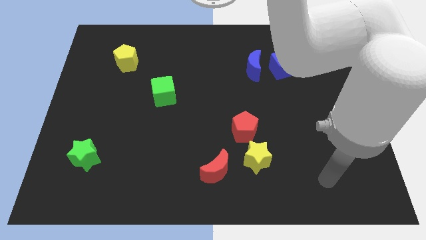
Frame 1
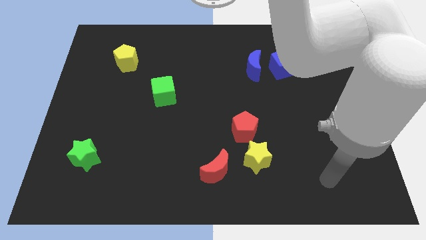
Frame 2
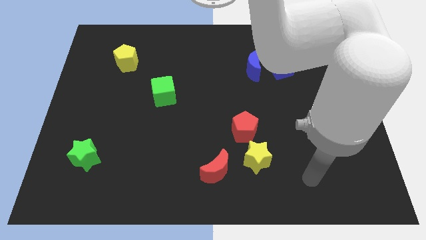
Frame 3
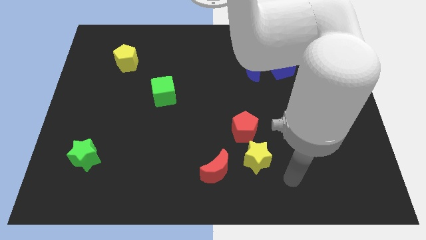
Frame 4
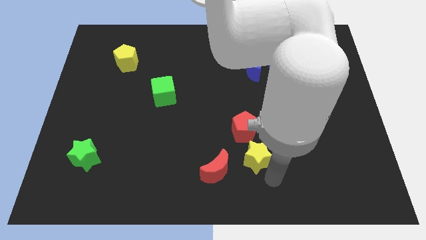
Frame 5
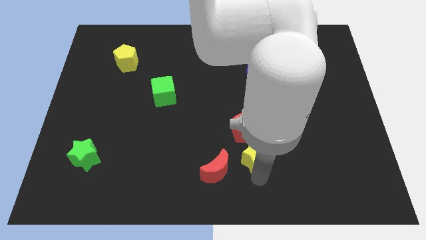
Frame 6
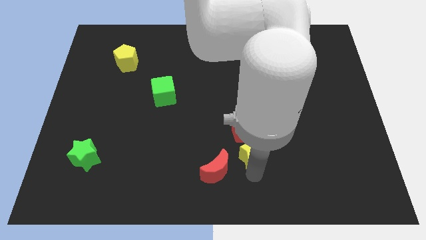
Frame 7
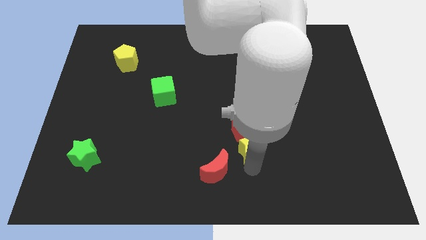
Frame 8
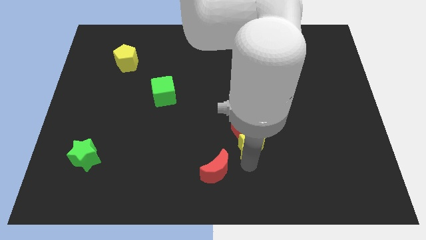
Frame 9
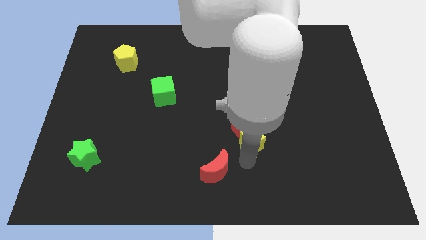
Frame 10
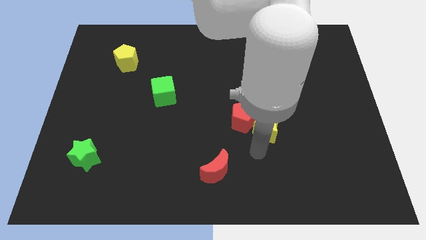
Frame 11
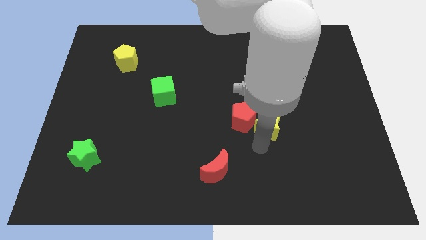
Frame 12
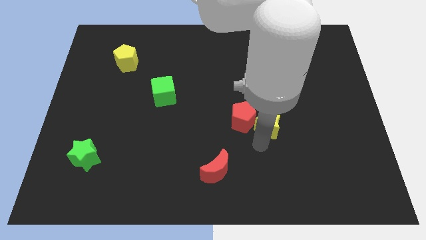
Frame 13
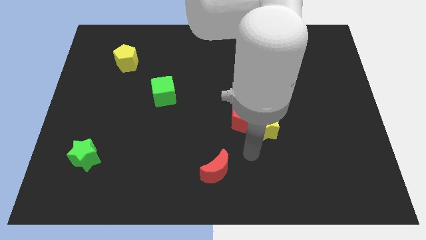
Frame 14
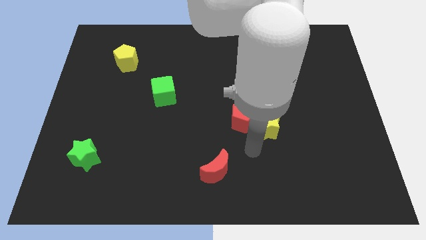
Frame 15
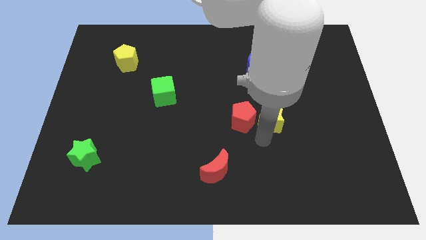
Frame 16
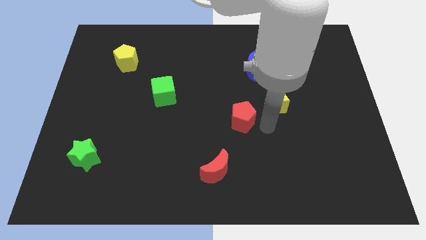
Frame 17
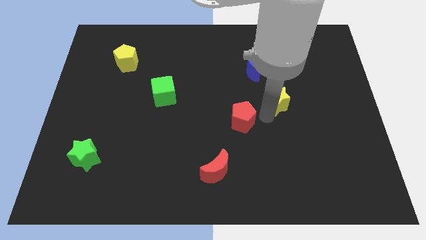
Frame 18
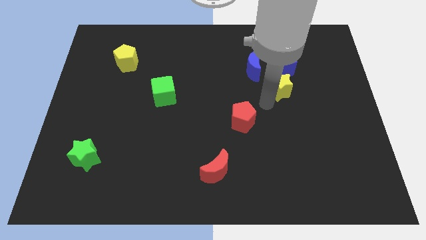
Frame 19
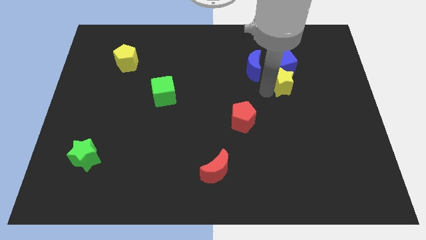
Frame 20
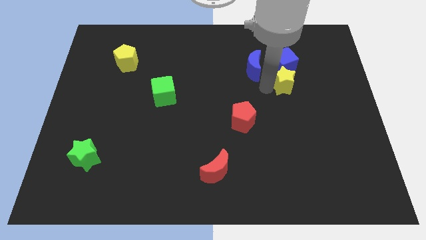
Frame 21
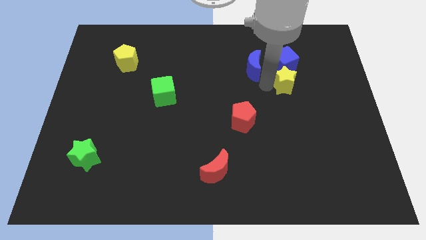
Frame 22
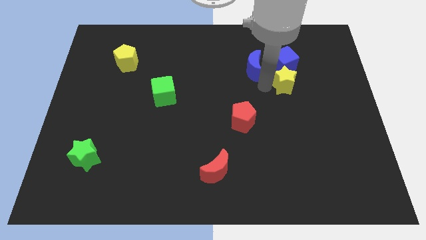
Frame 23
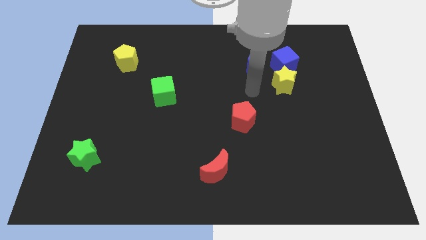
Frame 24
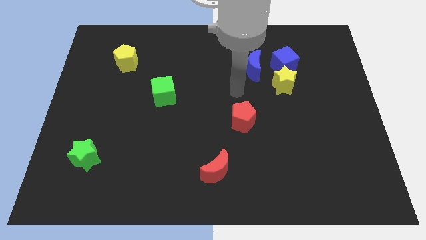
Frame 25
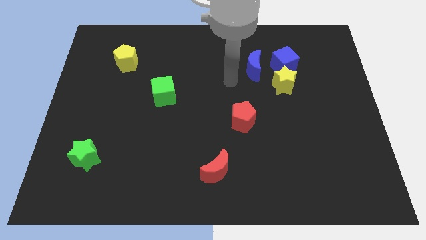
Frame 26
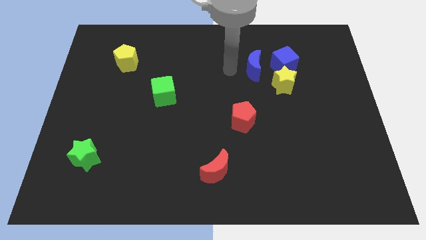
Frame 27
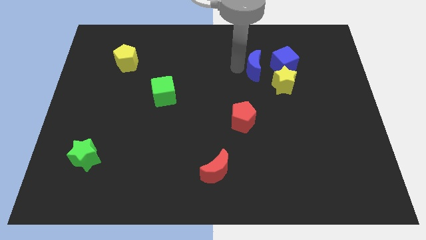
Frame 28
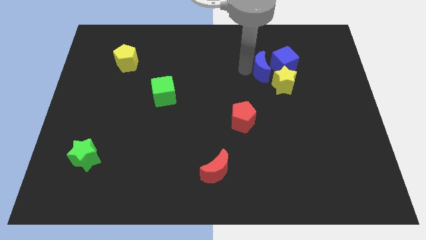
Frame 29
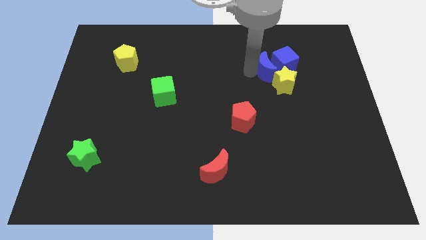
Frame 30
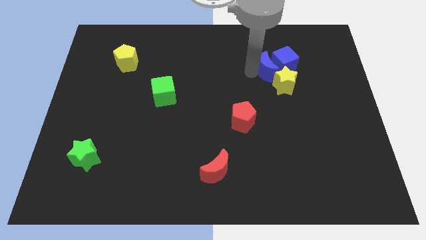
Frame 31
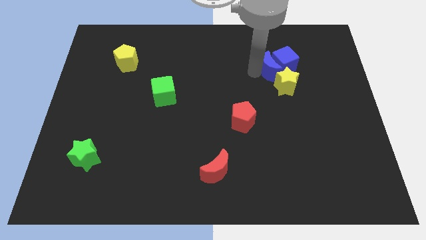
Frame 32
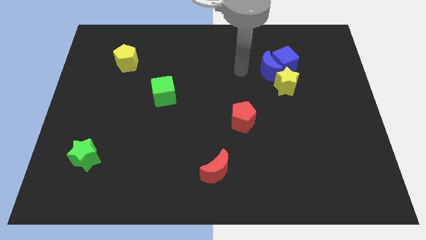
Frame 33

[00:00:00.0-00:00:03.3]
move the yellow star and blue moon into the blue cube

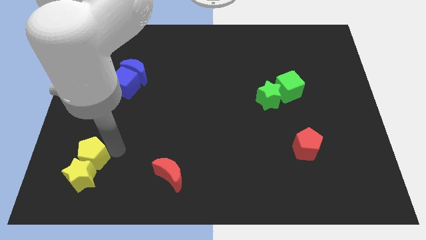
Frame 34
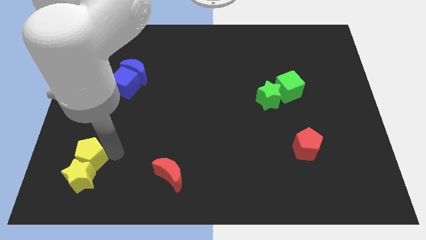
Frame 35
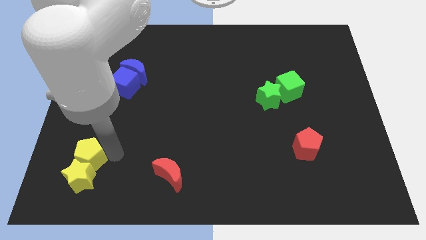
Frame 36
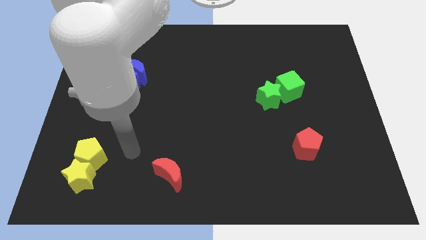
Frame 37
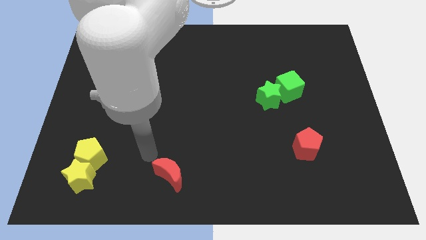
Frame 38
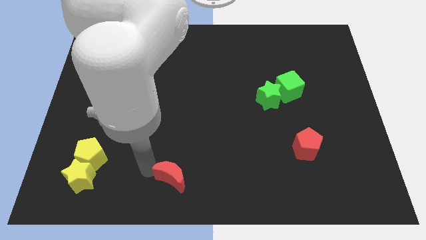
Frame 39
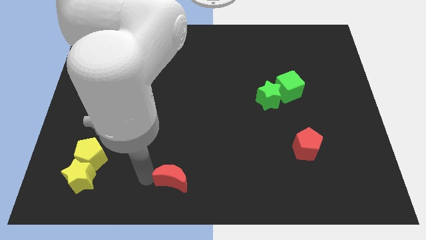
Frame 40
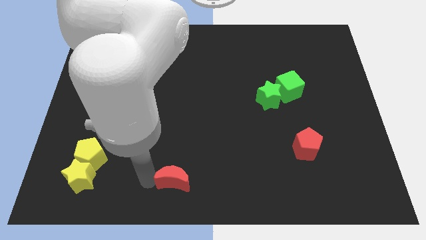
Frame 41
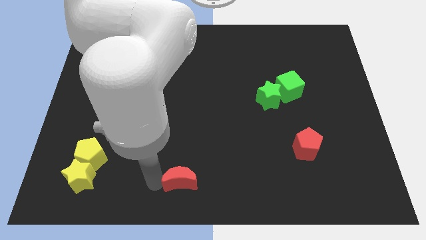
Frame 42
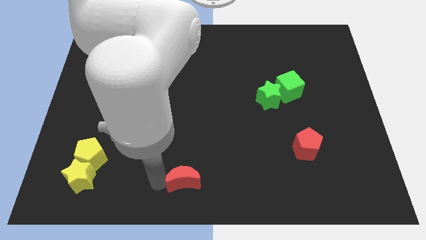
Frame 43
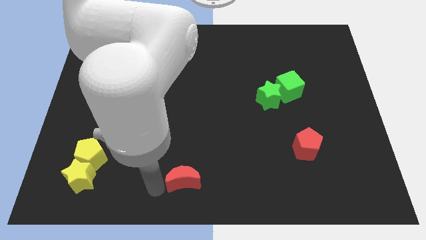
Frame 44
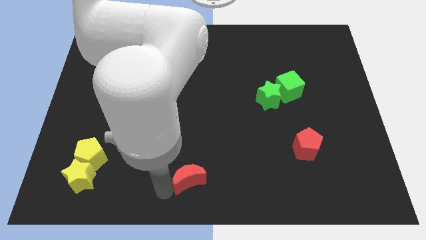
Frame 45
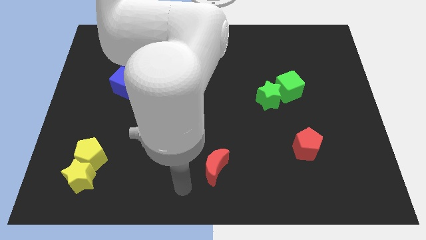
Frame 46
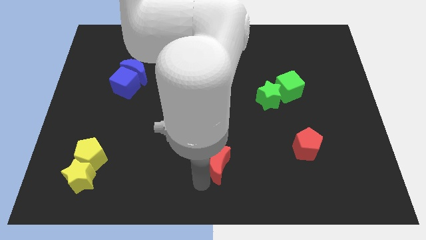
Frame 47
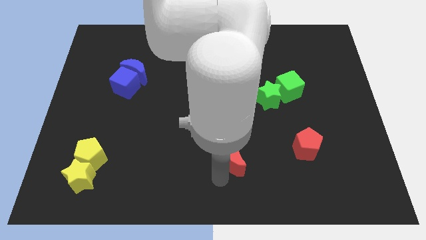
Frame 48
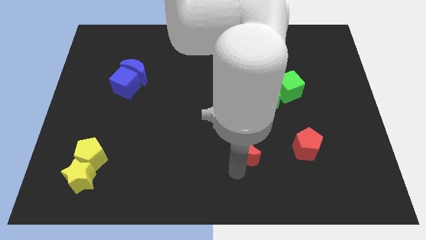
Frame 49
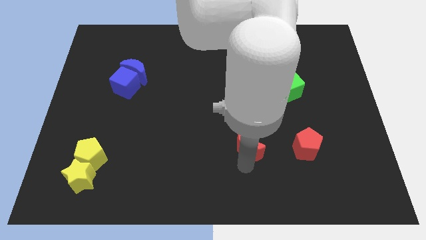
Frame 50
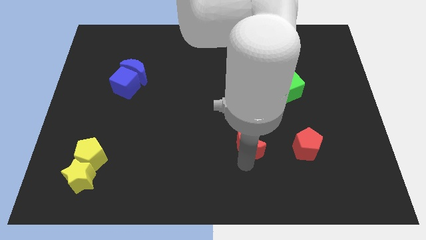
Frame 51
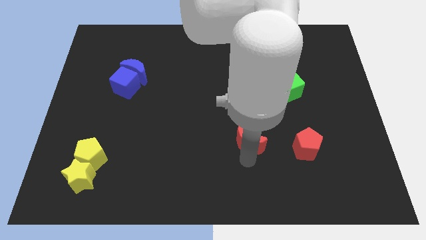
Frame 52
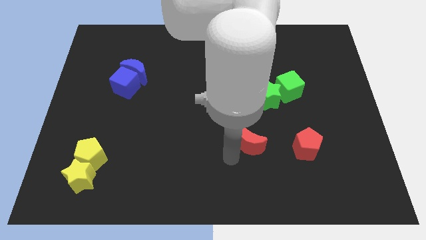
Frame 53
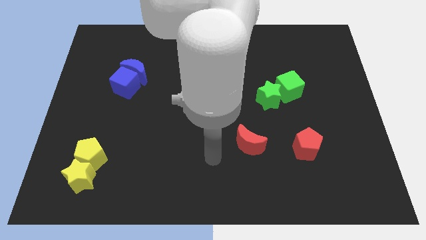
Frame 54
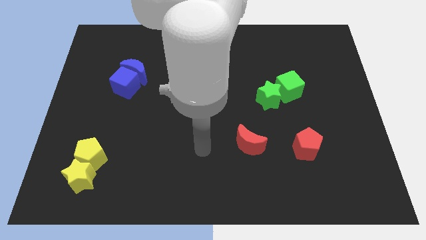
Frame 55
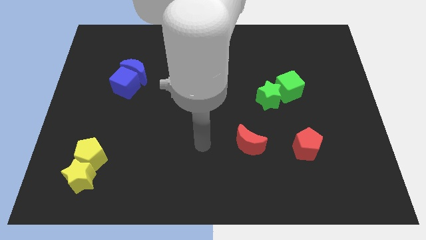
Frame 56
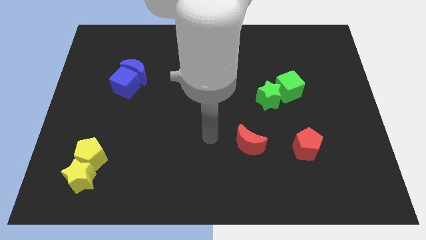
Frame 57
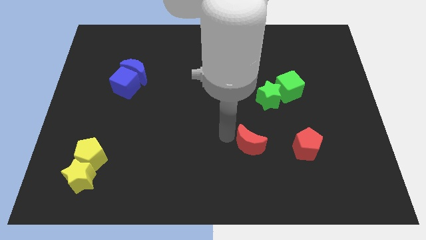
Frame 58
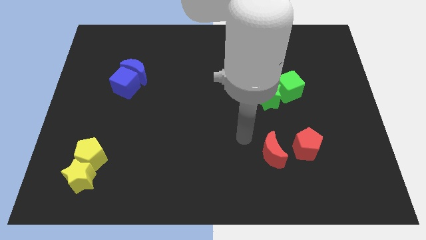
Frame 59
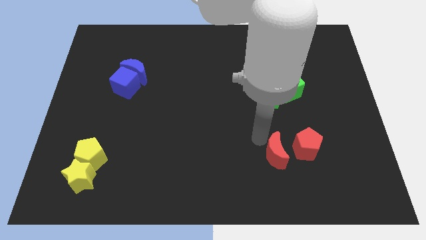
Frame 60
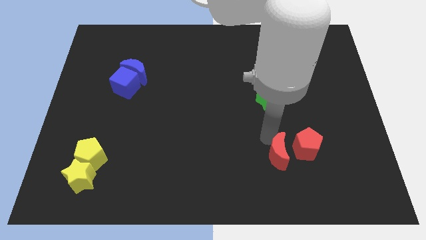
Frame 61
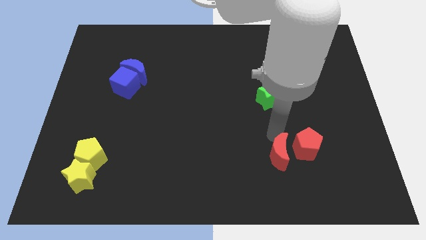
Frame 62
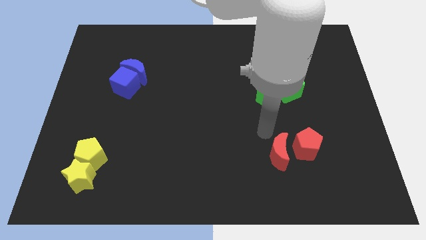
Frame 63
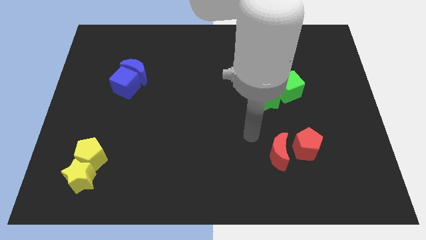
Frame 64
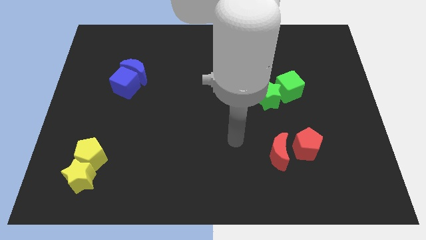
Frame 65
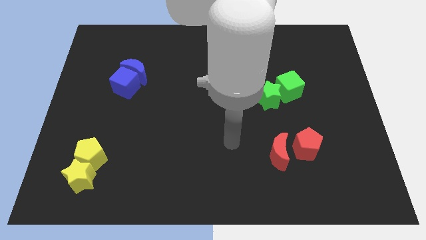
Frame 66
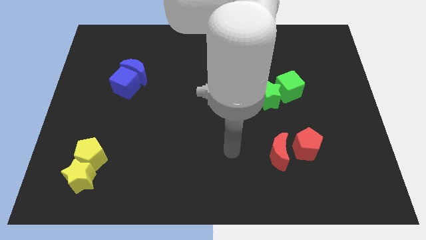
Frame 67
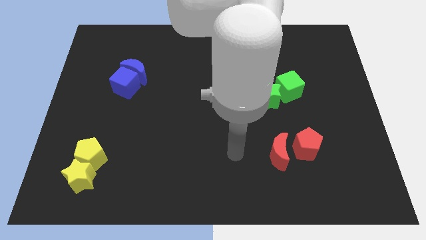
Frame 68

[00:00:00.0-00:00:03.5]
push the red crescent towards the red pentagon

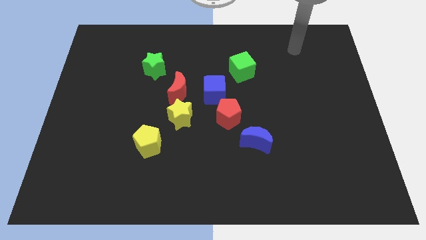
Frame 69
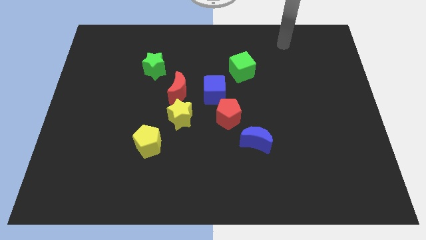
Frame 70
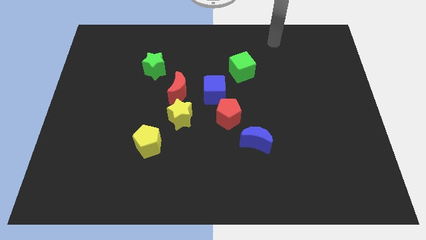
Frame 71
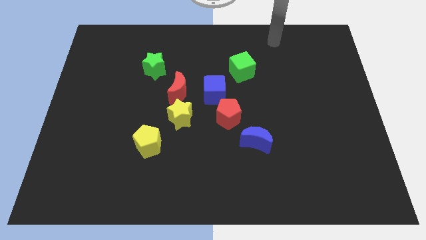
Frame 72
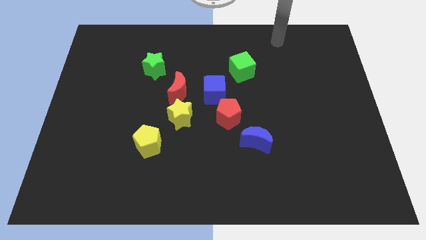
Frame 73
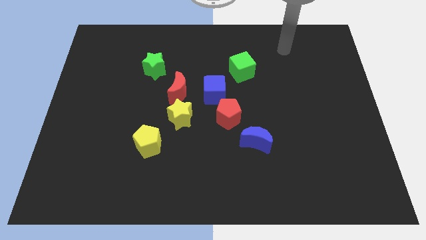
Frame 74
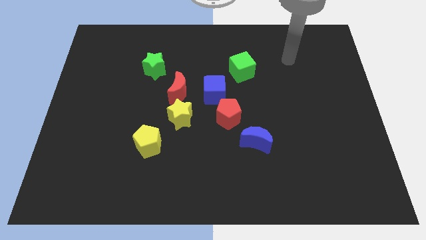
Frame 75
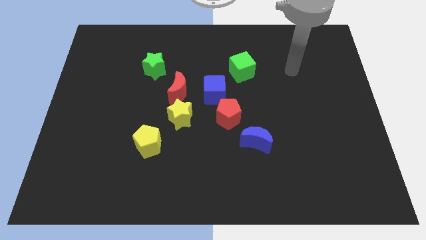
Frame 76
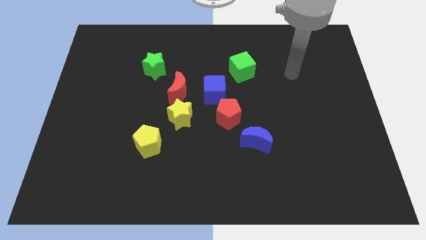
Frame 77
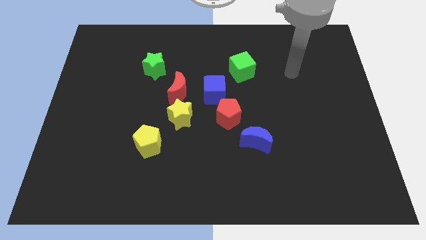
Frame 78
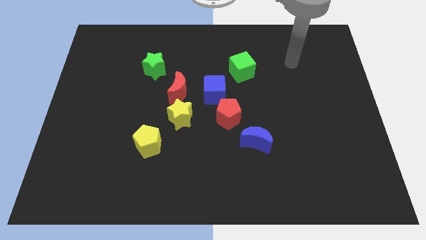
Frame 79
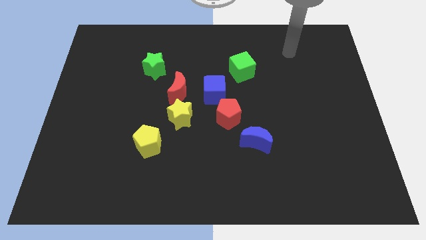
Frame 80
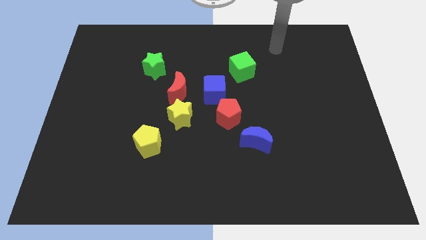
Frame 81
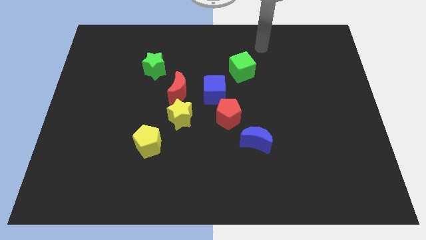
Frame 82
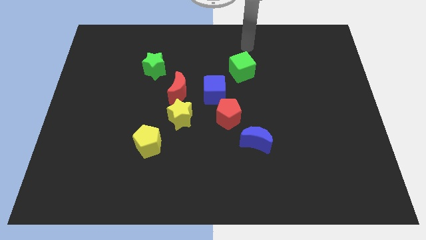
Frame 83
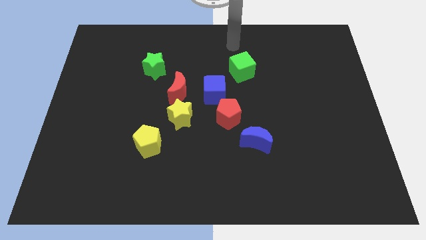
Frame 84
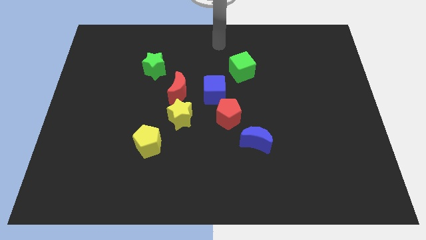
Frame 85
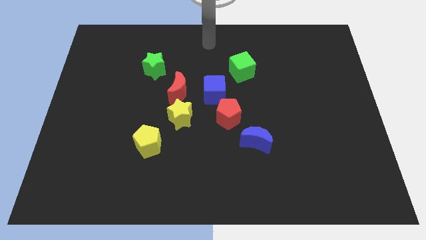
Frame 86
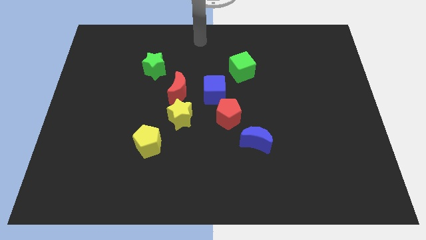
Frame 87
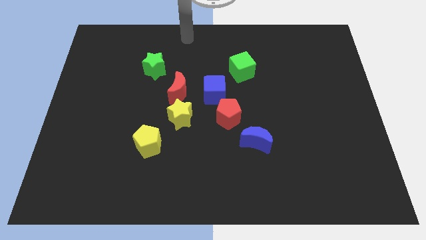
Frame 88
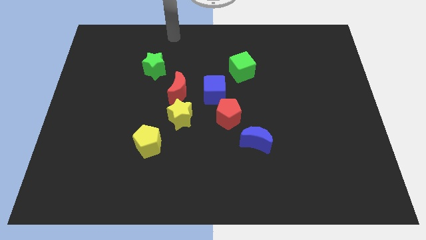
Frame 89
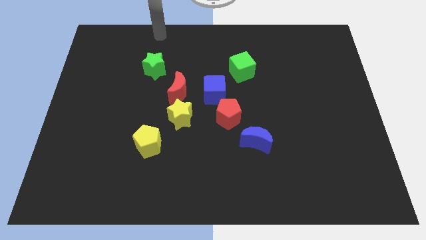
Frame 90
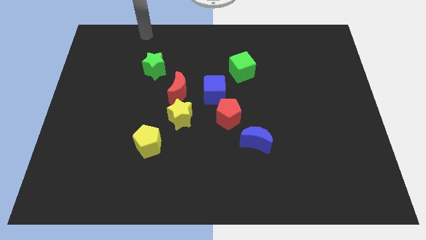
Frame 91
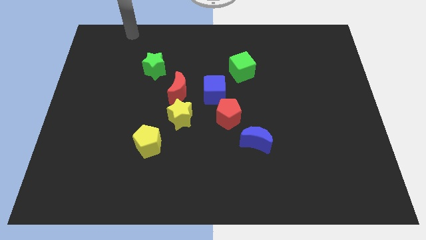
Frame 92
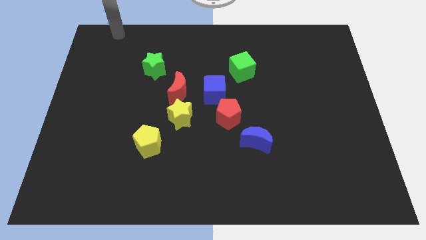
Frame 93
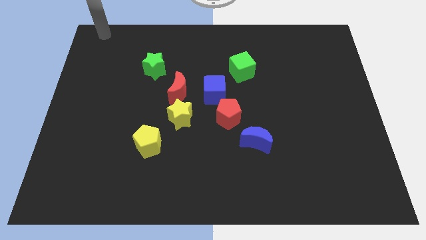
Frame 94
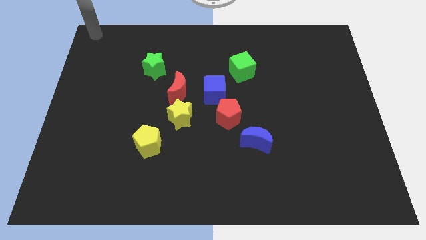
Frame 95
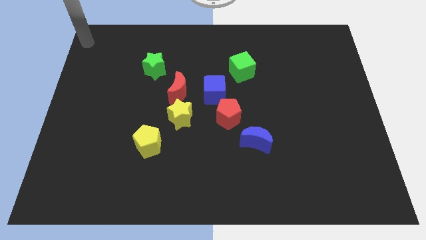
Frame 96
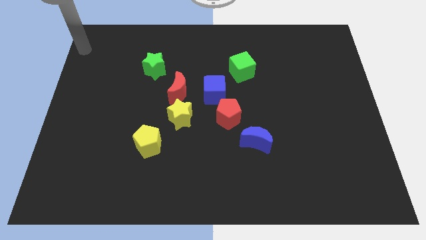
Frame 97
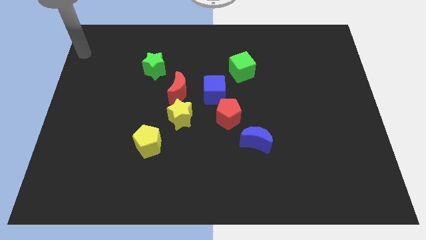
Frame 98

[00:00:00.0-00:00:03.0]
move the arm right
